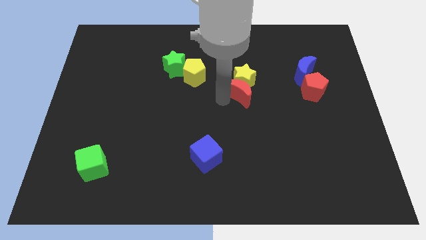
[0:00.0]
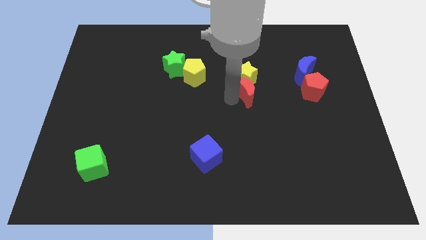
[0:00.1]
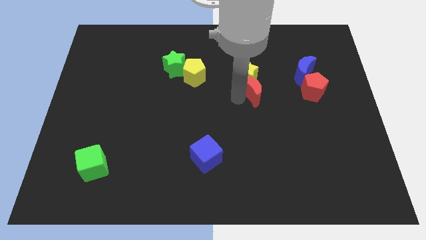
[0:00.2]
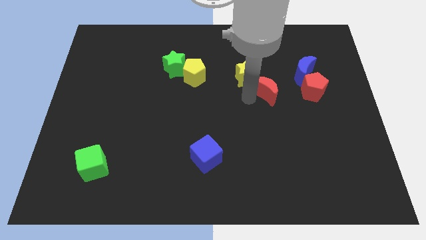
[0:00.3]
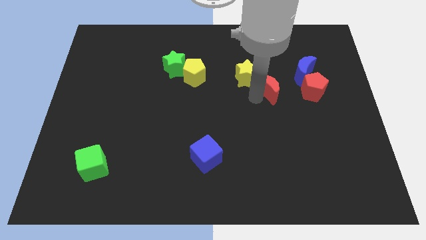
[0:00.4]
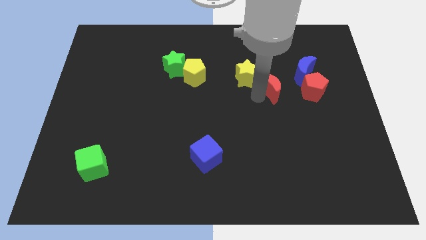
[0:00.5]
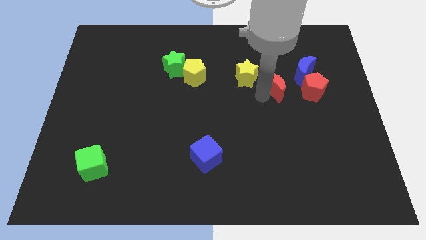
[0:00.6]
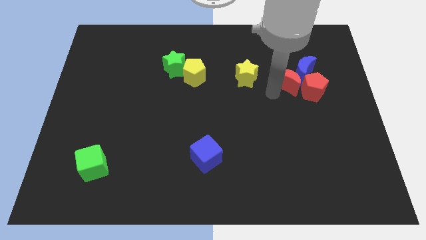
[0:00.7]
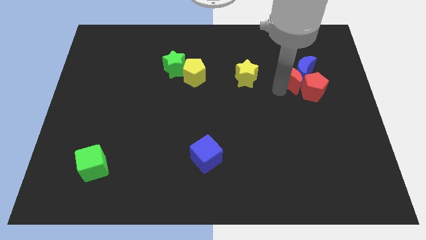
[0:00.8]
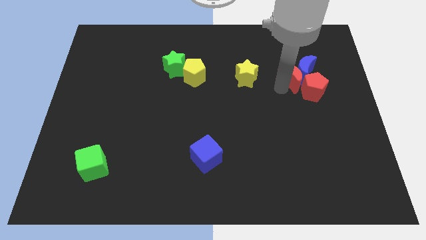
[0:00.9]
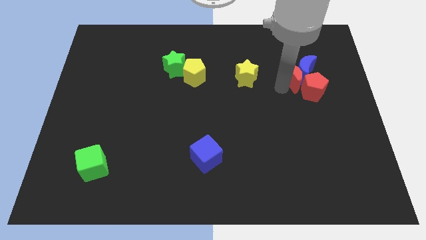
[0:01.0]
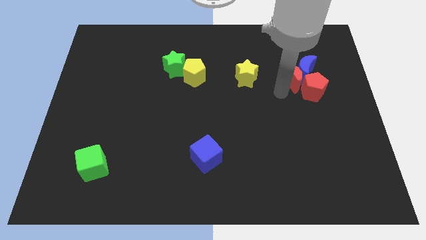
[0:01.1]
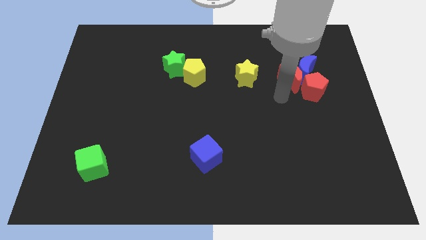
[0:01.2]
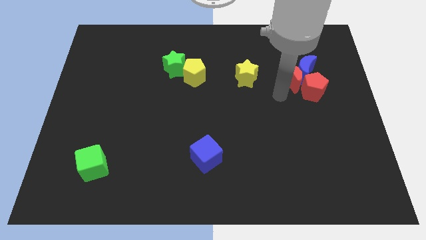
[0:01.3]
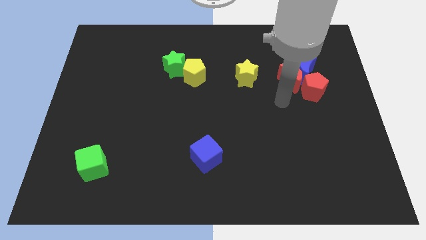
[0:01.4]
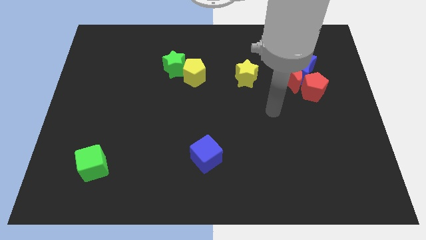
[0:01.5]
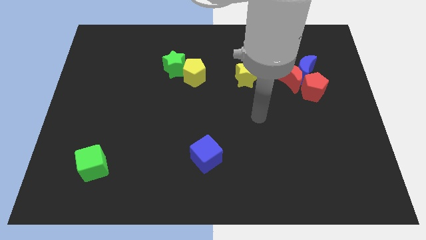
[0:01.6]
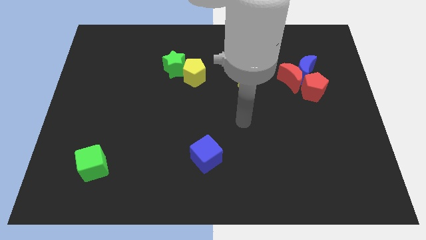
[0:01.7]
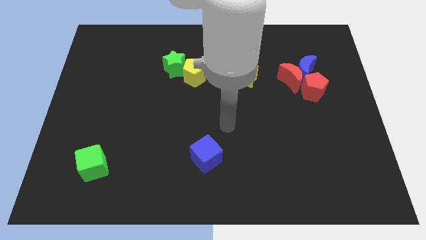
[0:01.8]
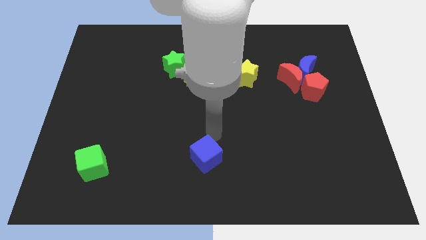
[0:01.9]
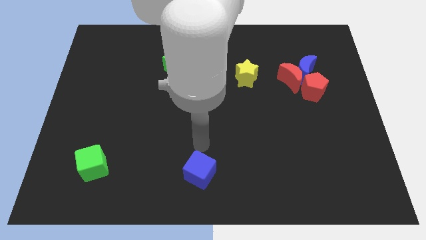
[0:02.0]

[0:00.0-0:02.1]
move the red moon left beside the blue moon and red pentagon

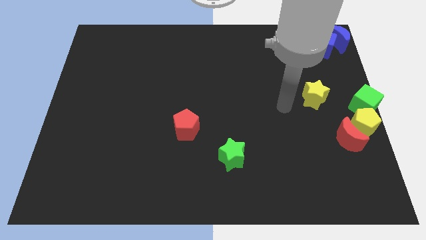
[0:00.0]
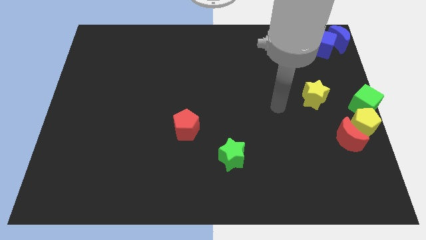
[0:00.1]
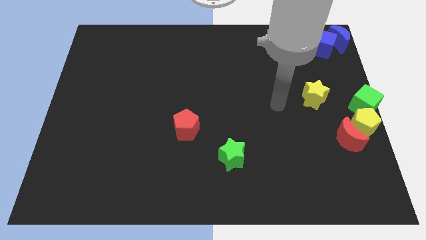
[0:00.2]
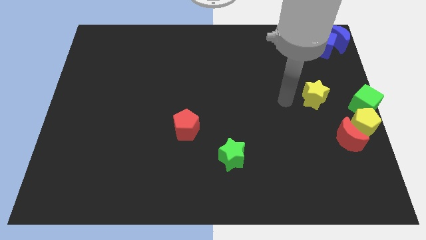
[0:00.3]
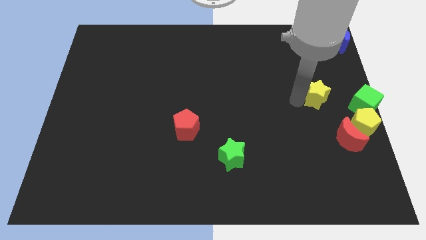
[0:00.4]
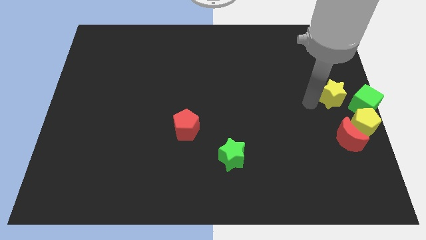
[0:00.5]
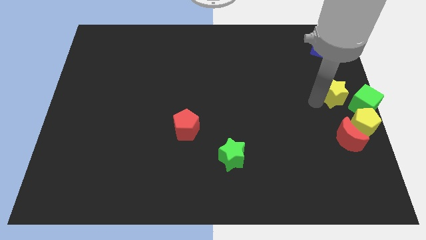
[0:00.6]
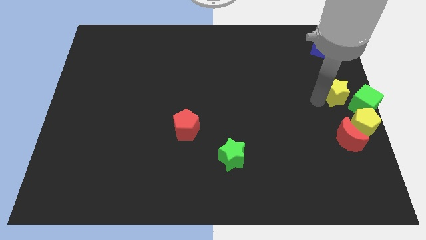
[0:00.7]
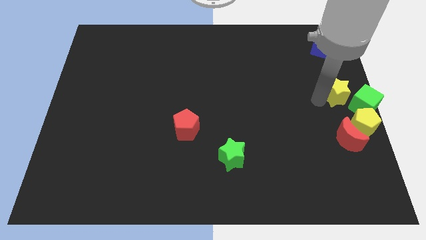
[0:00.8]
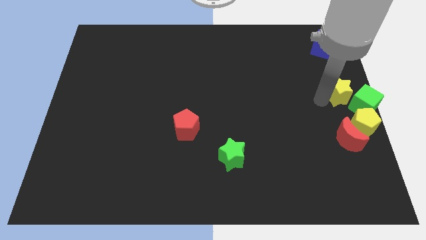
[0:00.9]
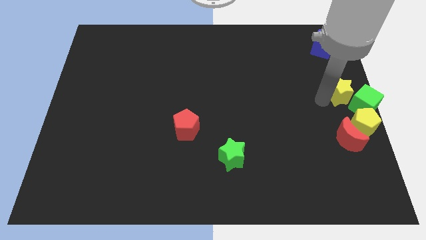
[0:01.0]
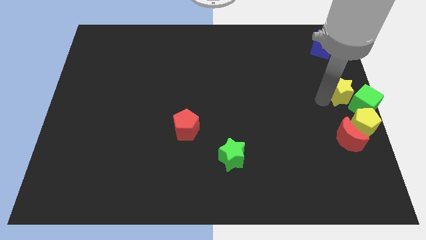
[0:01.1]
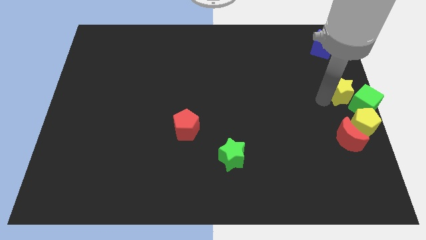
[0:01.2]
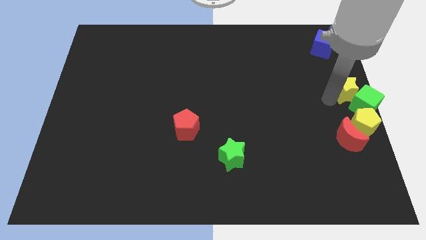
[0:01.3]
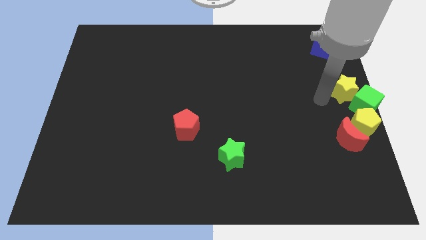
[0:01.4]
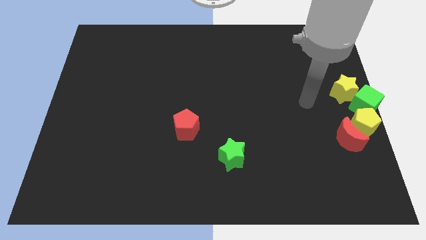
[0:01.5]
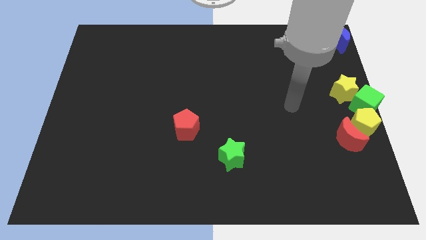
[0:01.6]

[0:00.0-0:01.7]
push the yellow star into the green cube

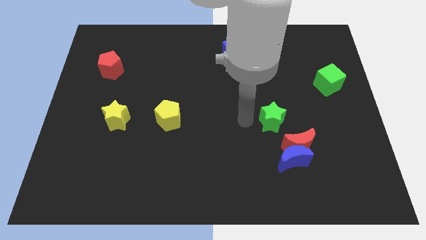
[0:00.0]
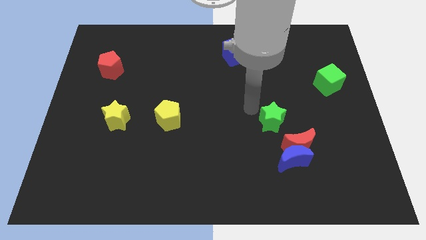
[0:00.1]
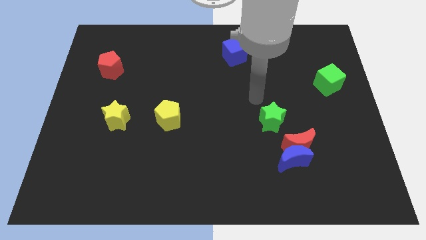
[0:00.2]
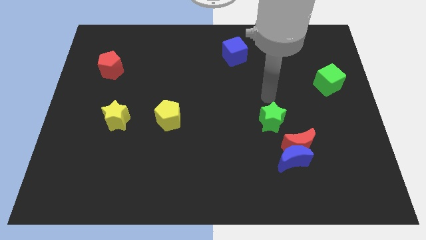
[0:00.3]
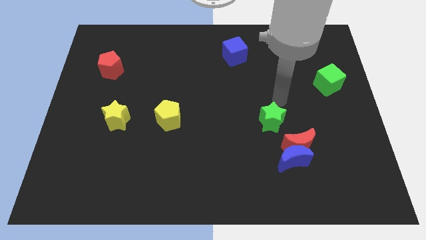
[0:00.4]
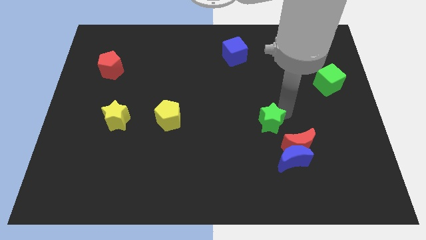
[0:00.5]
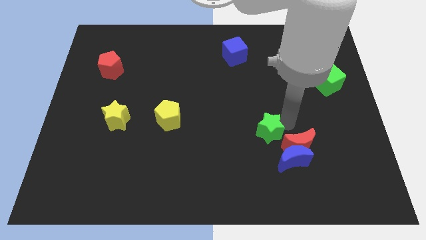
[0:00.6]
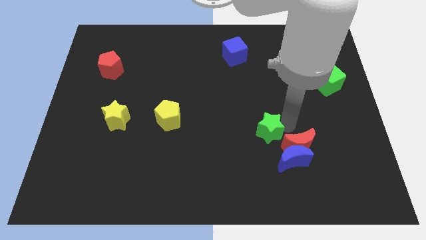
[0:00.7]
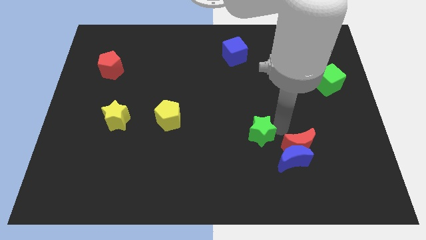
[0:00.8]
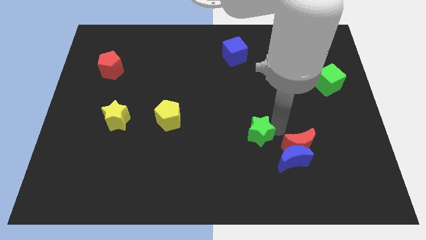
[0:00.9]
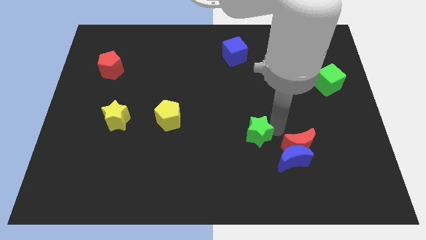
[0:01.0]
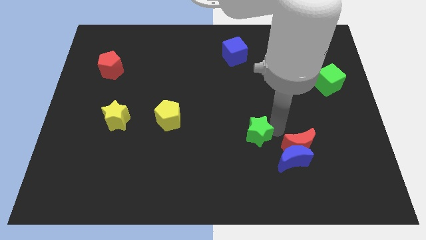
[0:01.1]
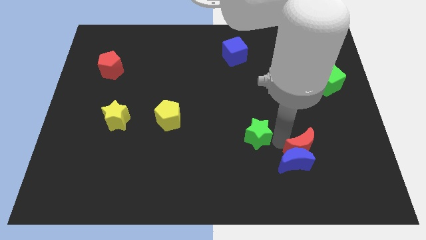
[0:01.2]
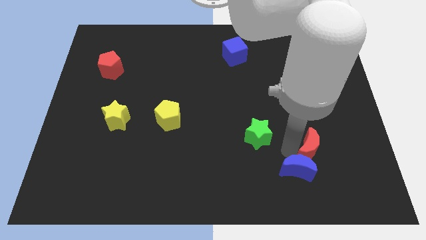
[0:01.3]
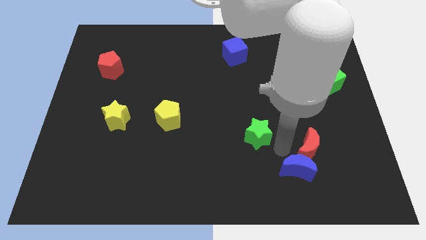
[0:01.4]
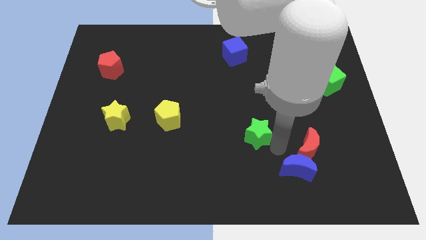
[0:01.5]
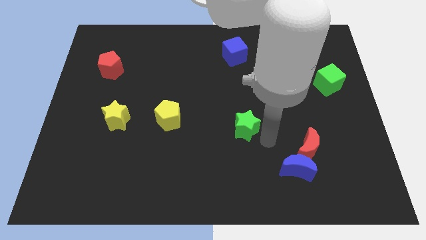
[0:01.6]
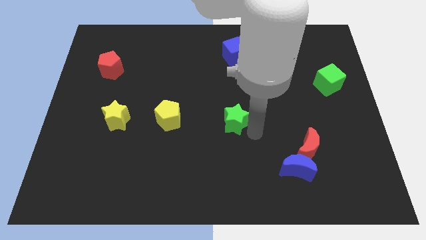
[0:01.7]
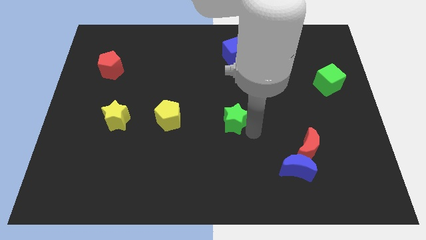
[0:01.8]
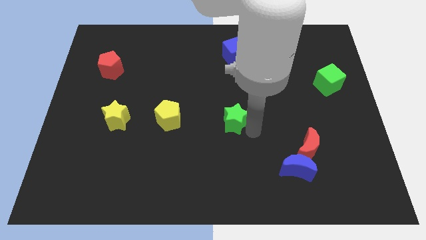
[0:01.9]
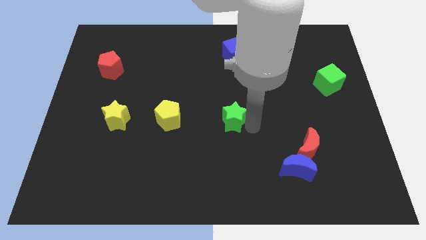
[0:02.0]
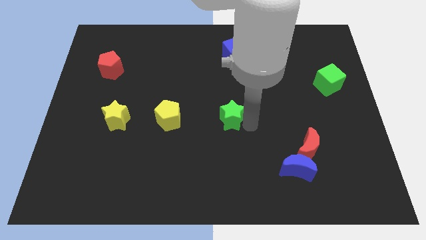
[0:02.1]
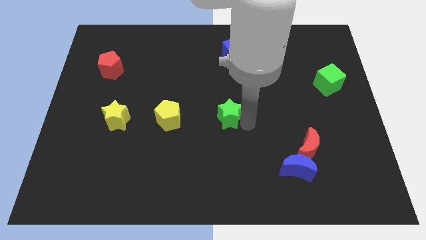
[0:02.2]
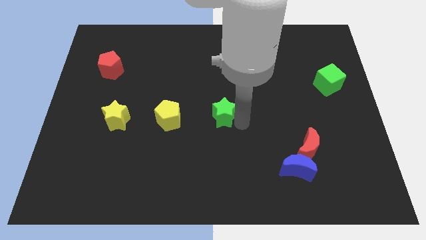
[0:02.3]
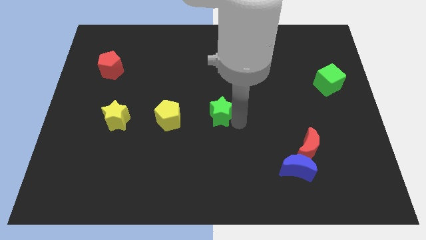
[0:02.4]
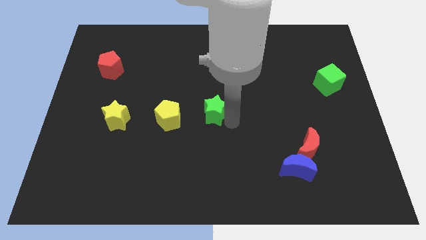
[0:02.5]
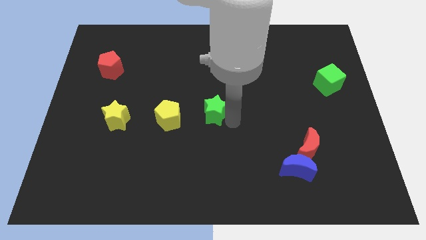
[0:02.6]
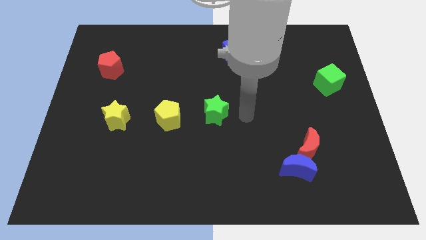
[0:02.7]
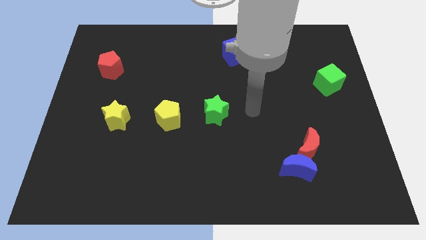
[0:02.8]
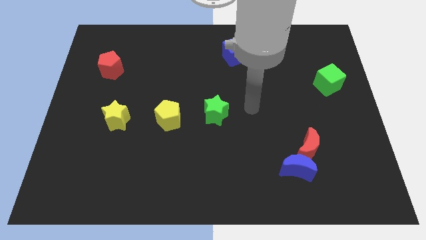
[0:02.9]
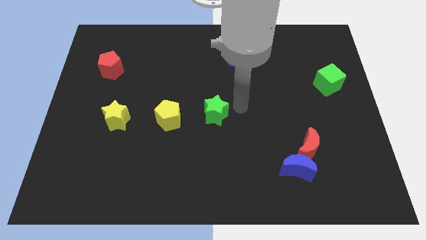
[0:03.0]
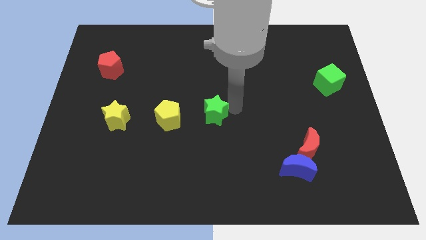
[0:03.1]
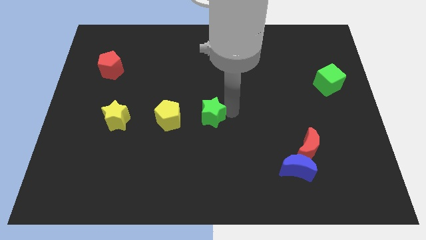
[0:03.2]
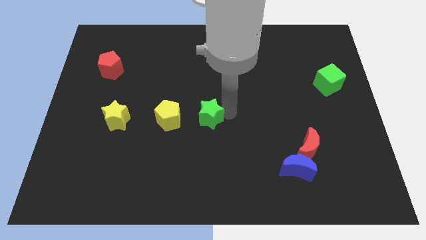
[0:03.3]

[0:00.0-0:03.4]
move the green star away from the red moon

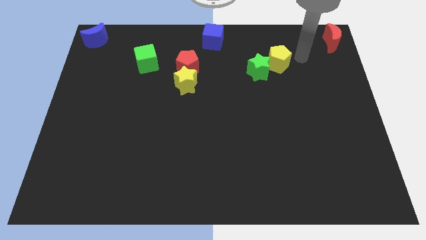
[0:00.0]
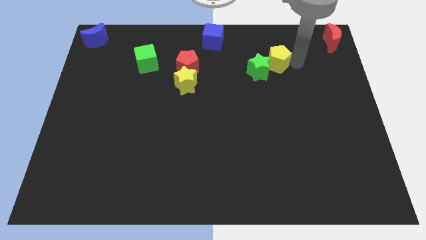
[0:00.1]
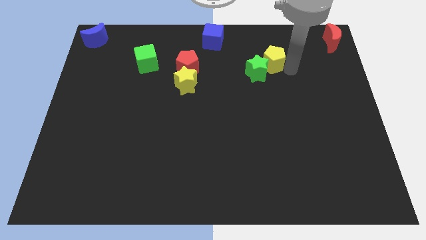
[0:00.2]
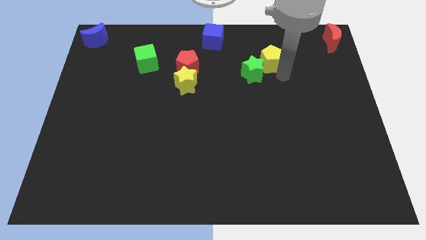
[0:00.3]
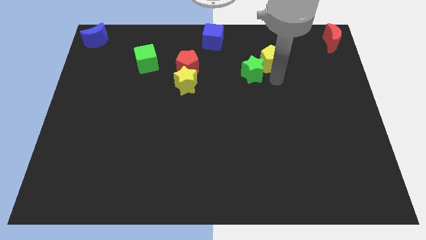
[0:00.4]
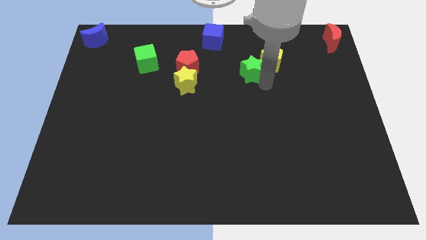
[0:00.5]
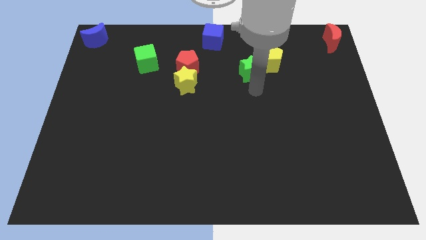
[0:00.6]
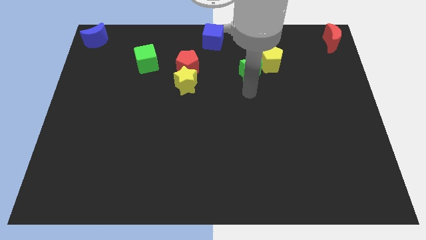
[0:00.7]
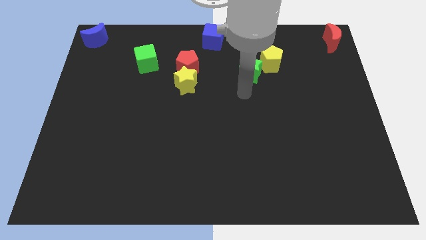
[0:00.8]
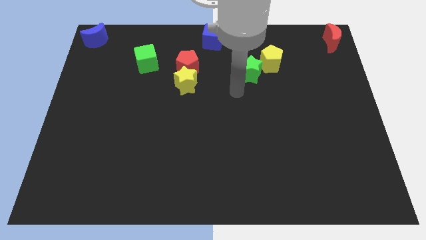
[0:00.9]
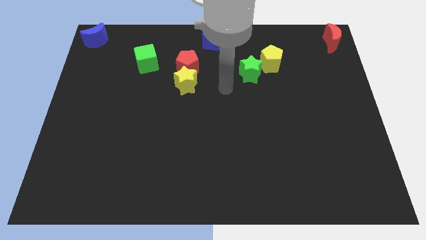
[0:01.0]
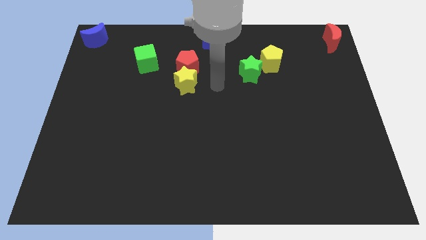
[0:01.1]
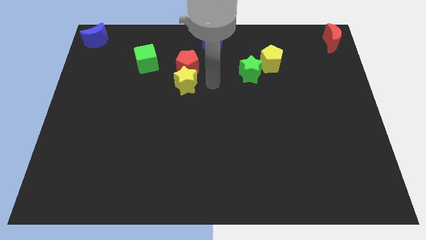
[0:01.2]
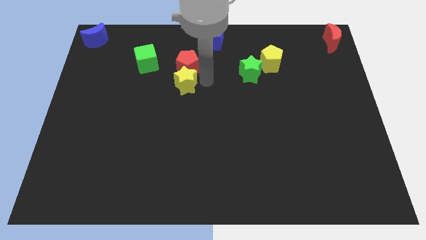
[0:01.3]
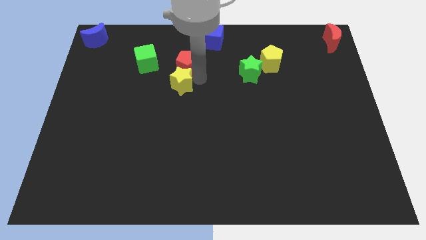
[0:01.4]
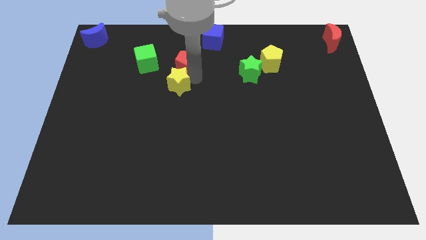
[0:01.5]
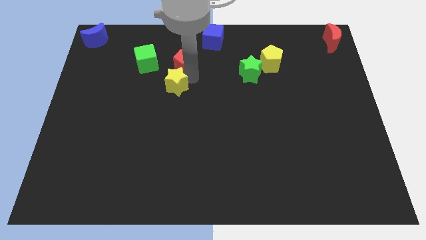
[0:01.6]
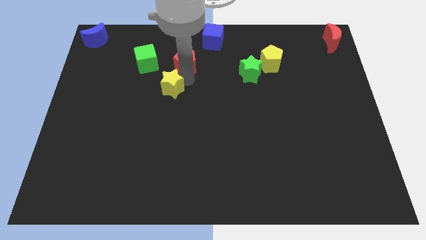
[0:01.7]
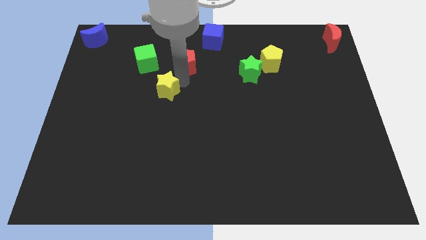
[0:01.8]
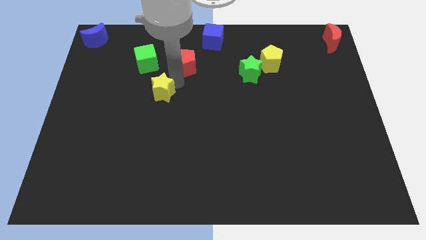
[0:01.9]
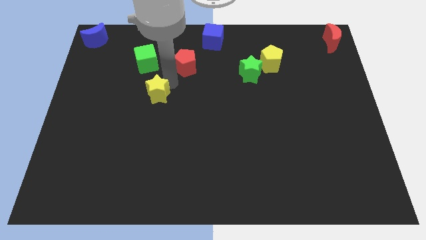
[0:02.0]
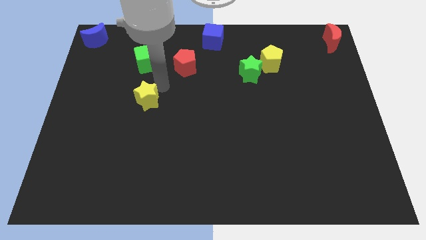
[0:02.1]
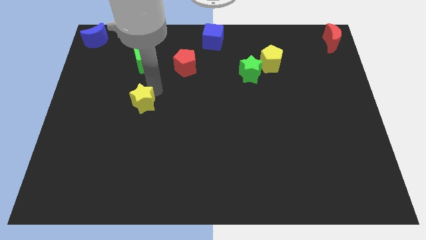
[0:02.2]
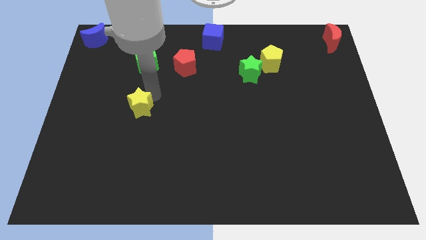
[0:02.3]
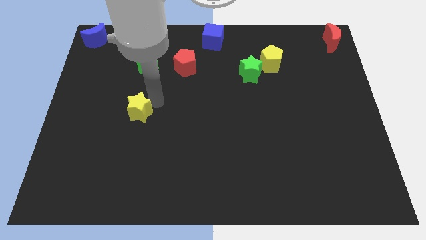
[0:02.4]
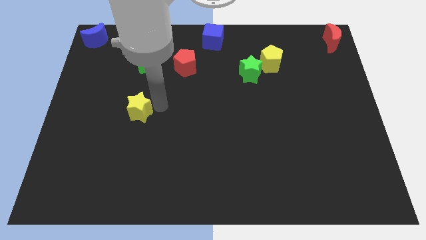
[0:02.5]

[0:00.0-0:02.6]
place the yellow star vertically below the green cube
